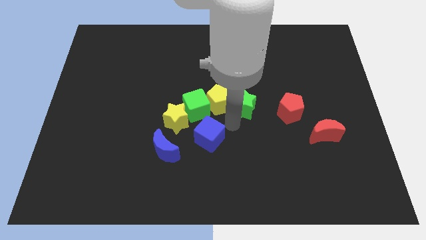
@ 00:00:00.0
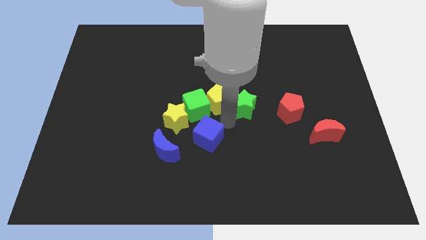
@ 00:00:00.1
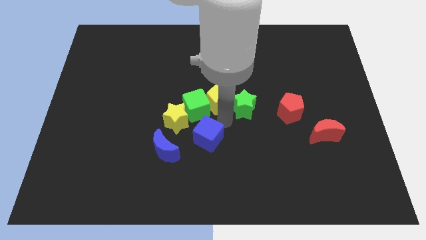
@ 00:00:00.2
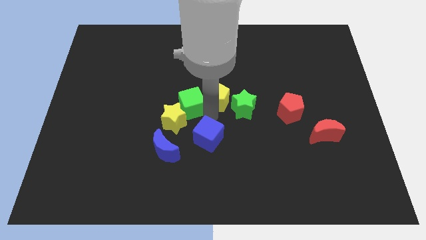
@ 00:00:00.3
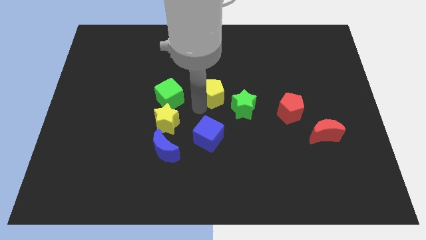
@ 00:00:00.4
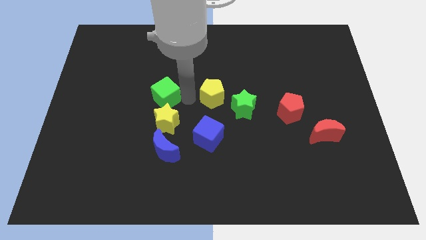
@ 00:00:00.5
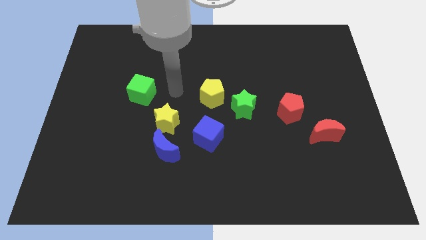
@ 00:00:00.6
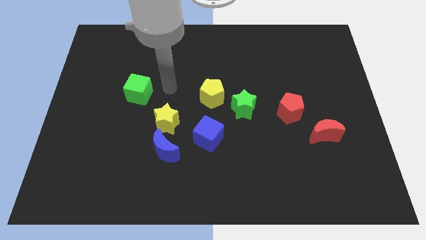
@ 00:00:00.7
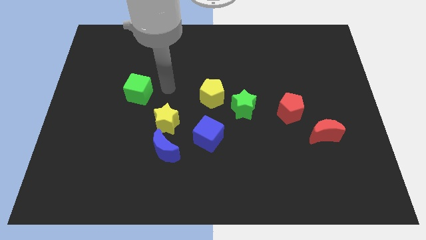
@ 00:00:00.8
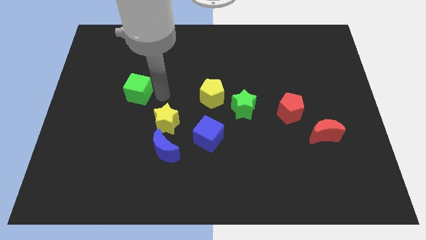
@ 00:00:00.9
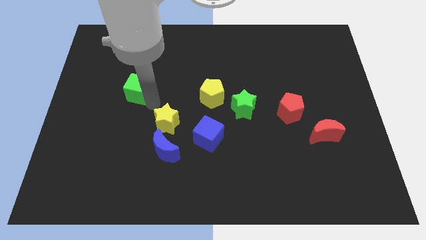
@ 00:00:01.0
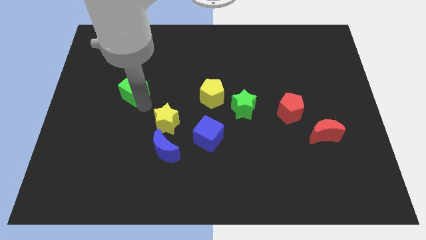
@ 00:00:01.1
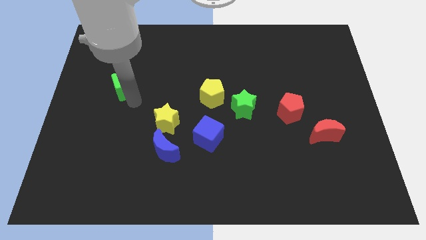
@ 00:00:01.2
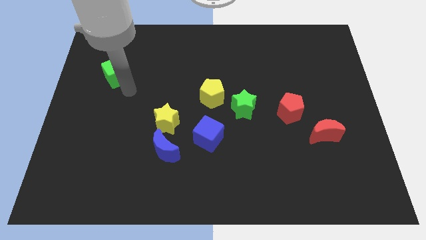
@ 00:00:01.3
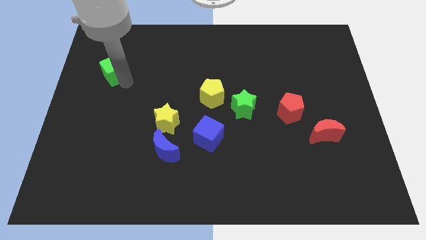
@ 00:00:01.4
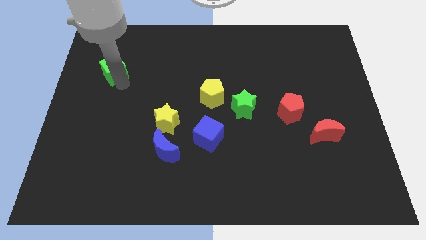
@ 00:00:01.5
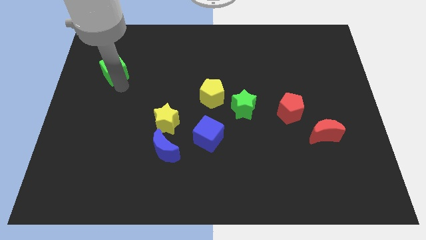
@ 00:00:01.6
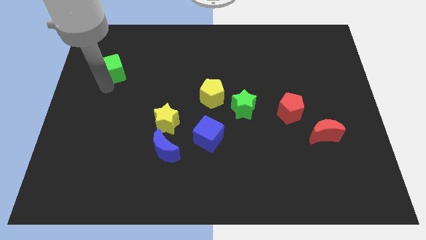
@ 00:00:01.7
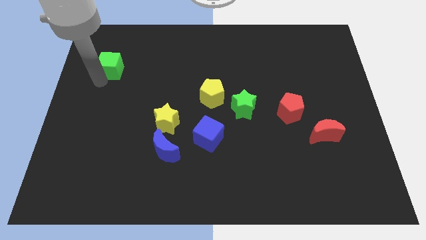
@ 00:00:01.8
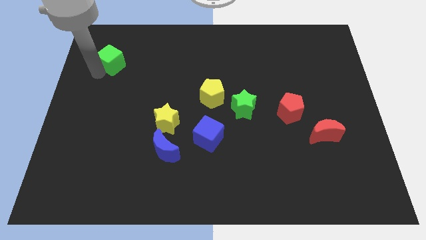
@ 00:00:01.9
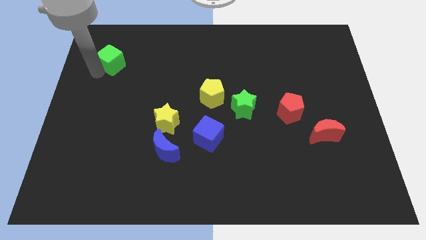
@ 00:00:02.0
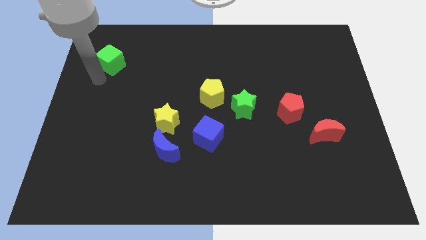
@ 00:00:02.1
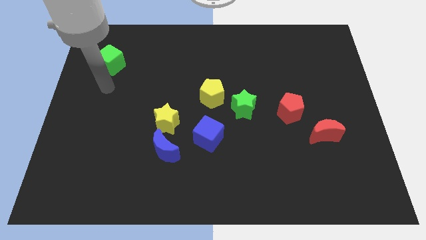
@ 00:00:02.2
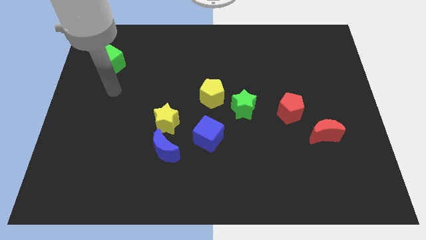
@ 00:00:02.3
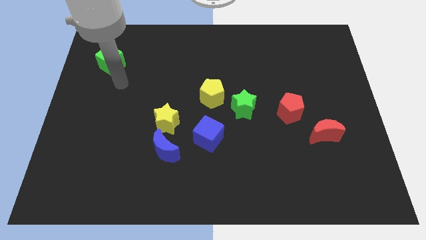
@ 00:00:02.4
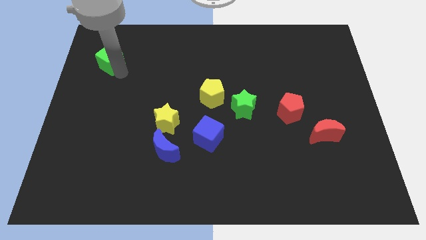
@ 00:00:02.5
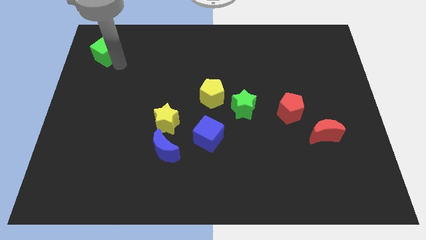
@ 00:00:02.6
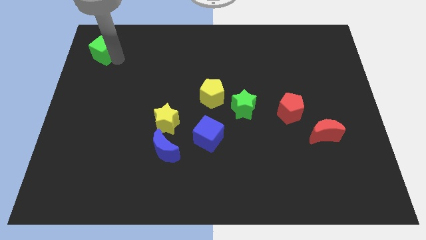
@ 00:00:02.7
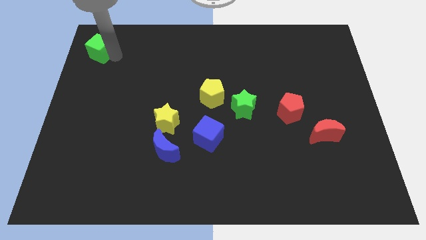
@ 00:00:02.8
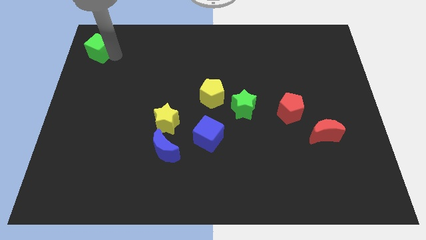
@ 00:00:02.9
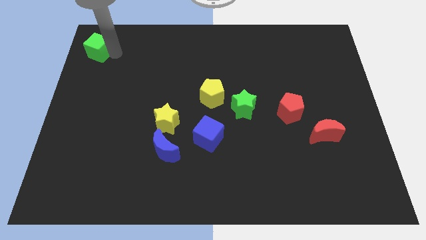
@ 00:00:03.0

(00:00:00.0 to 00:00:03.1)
separate the green cube away from the group of blocks

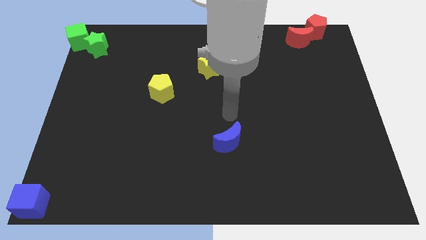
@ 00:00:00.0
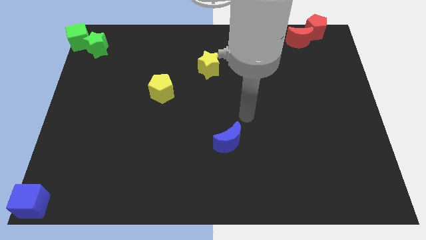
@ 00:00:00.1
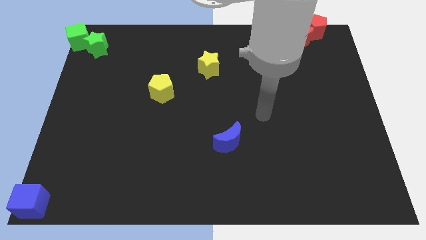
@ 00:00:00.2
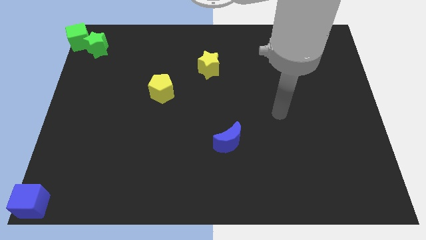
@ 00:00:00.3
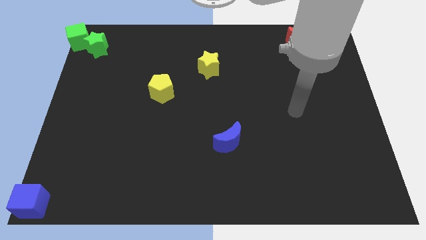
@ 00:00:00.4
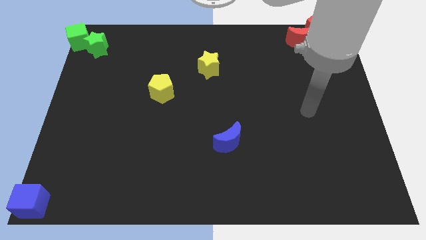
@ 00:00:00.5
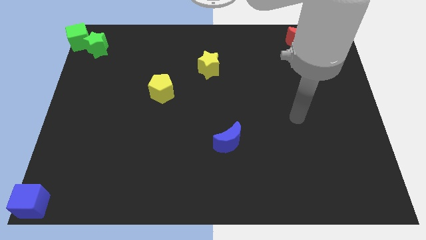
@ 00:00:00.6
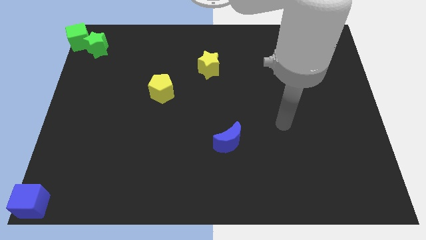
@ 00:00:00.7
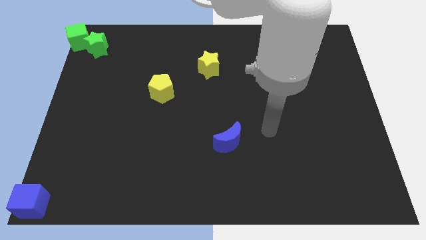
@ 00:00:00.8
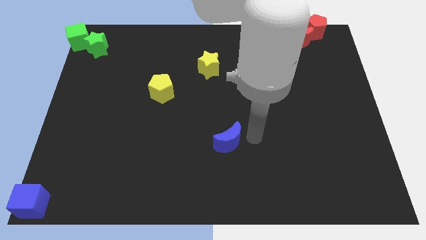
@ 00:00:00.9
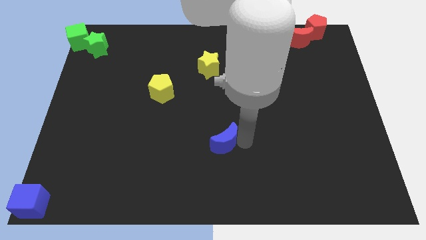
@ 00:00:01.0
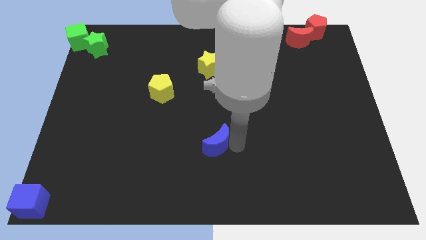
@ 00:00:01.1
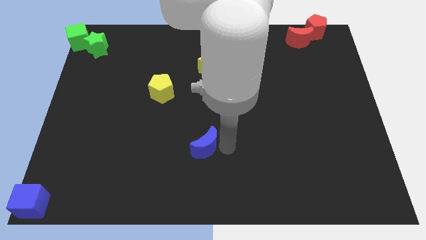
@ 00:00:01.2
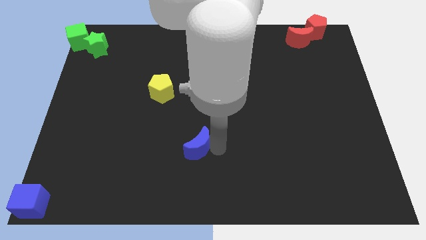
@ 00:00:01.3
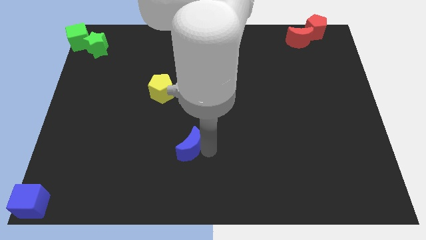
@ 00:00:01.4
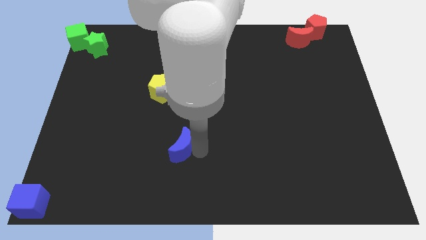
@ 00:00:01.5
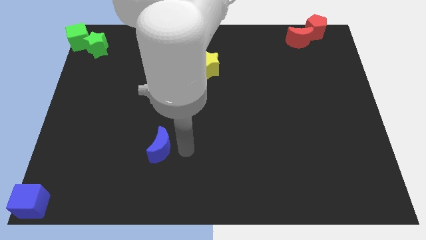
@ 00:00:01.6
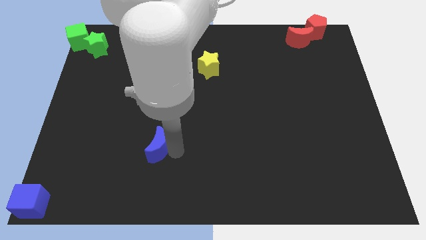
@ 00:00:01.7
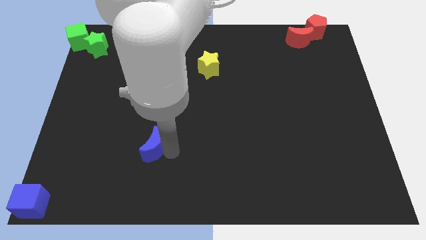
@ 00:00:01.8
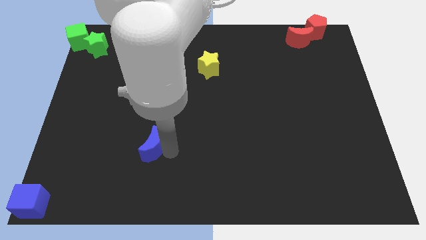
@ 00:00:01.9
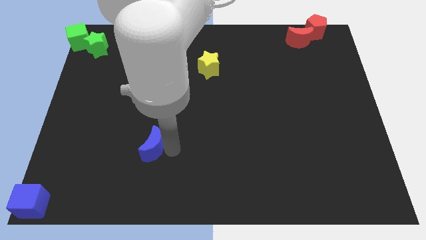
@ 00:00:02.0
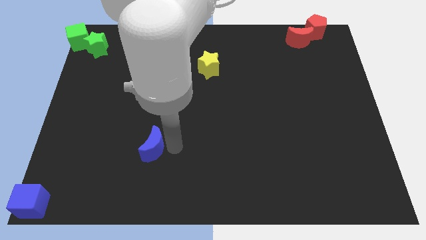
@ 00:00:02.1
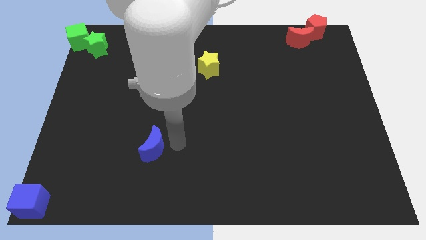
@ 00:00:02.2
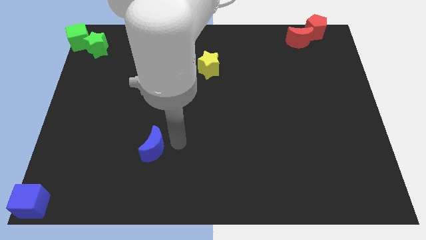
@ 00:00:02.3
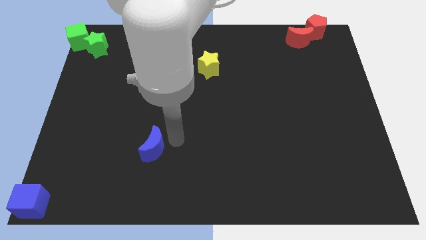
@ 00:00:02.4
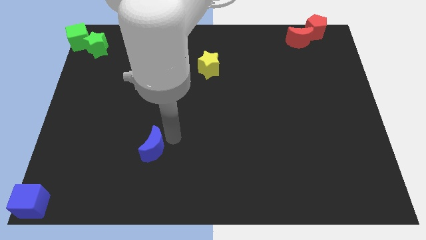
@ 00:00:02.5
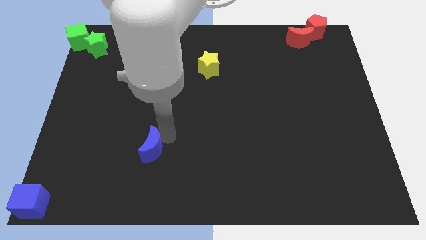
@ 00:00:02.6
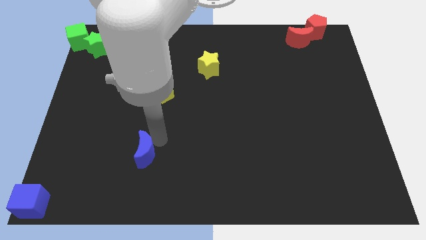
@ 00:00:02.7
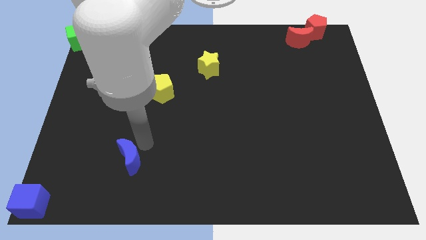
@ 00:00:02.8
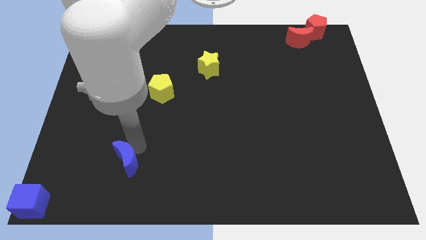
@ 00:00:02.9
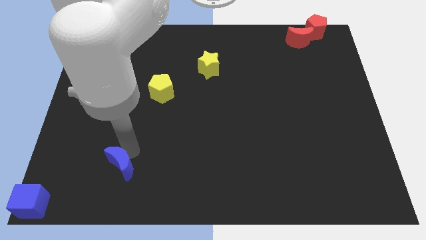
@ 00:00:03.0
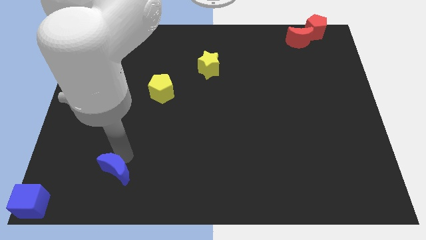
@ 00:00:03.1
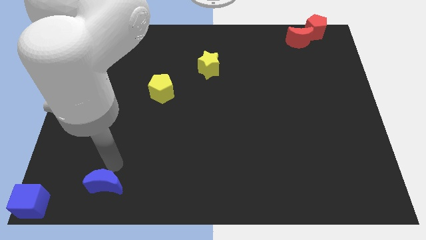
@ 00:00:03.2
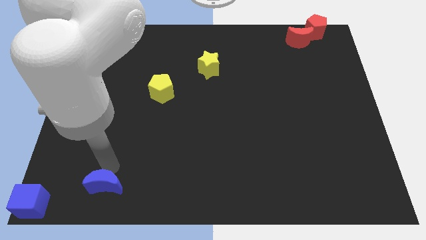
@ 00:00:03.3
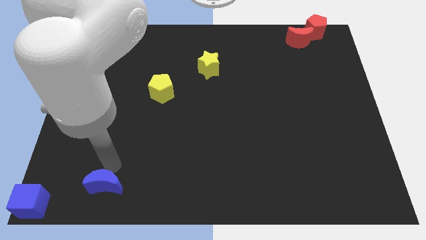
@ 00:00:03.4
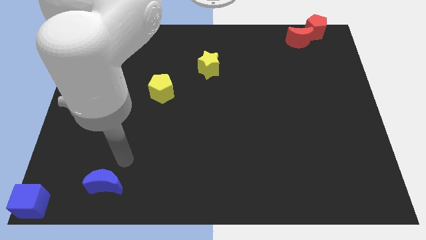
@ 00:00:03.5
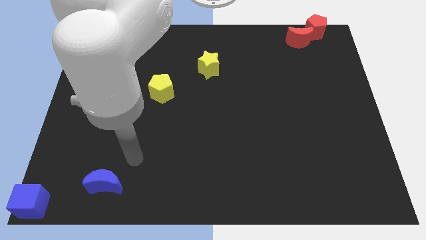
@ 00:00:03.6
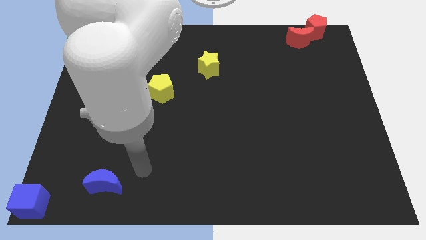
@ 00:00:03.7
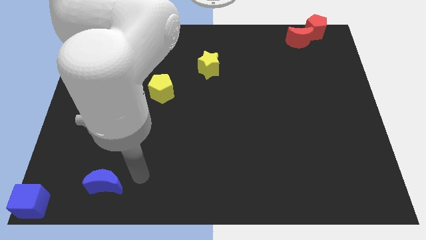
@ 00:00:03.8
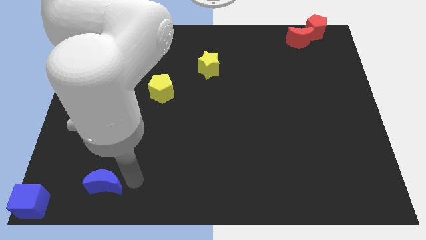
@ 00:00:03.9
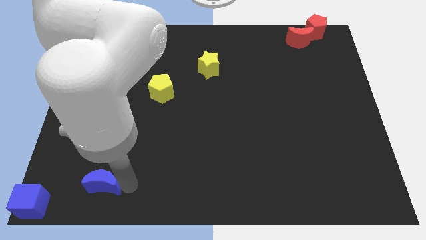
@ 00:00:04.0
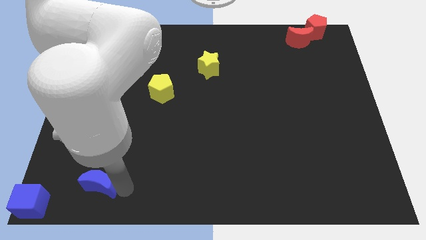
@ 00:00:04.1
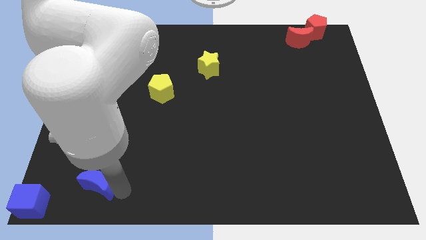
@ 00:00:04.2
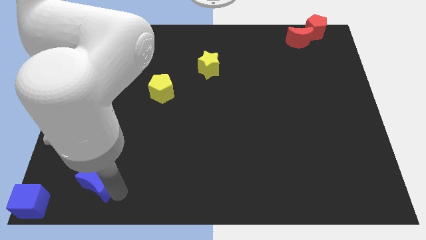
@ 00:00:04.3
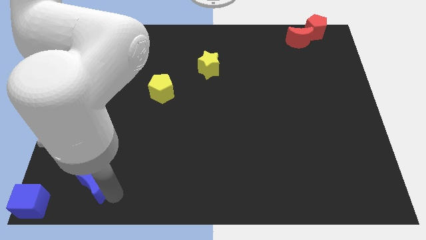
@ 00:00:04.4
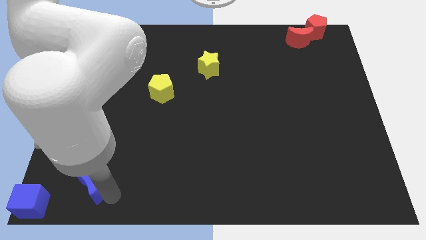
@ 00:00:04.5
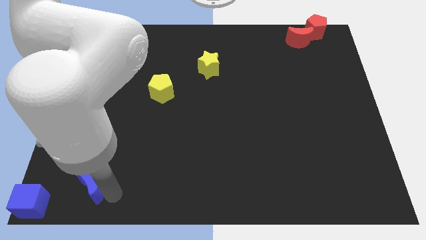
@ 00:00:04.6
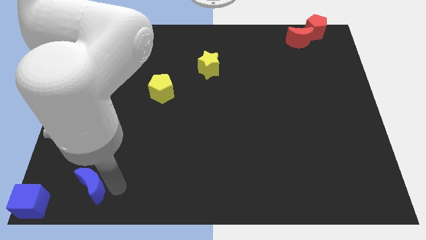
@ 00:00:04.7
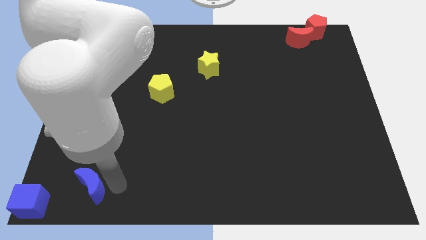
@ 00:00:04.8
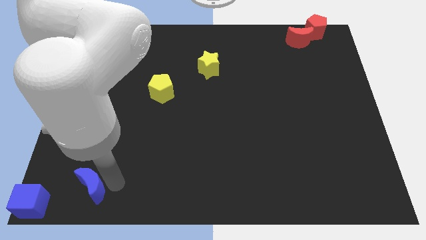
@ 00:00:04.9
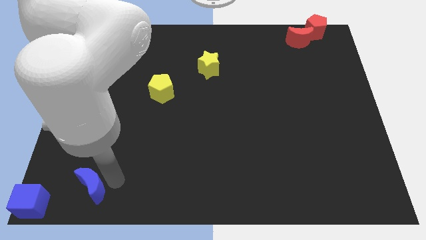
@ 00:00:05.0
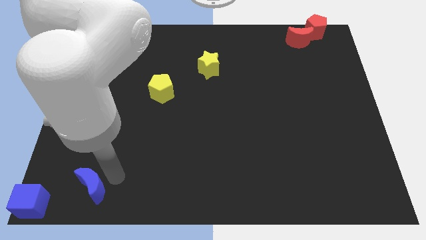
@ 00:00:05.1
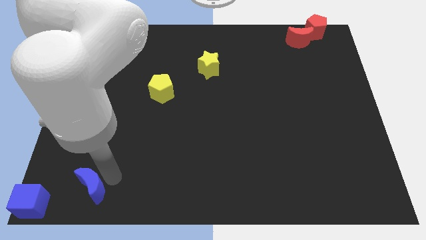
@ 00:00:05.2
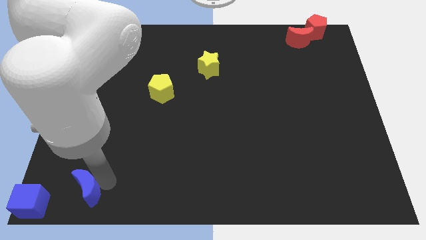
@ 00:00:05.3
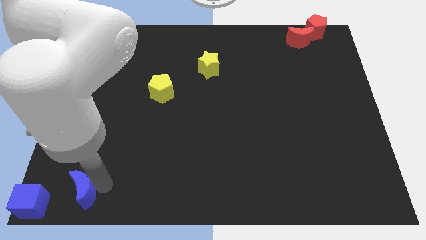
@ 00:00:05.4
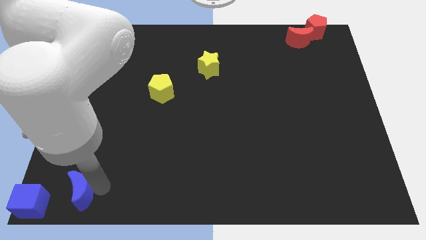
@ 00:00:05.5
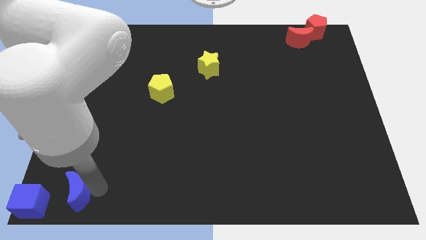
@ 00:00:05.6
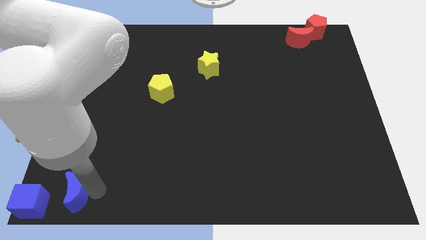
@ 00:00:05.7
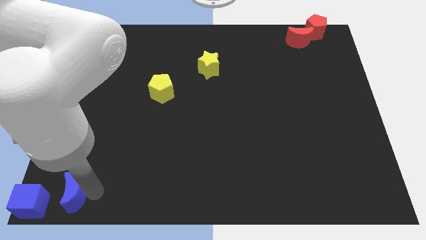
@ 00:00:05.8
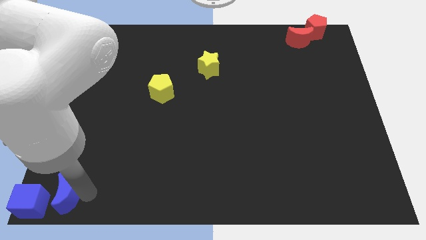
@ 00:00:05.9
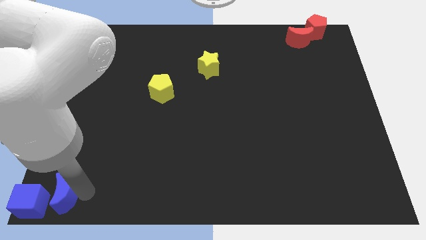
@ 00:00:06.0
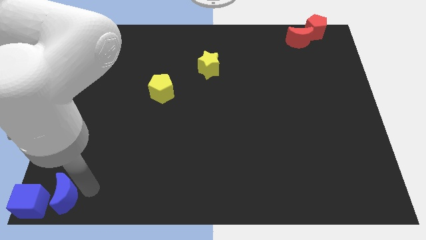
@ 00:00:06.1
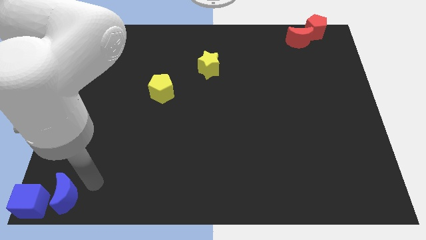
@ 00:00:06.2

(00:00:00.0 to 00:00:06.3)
slide the blue crescent to the right of the blue cube
